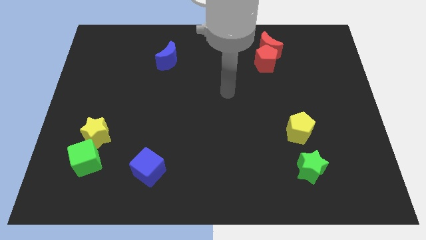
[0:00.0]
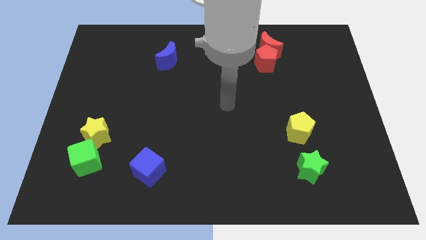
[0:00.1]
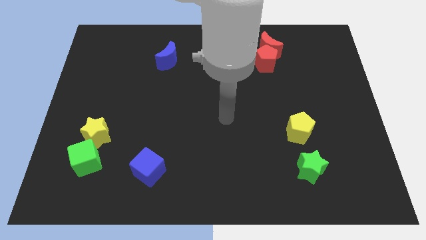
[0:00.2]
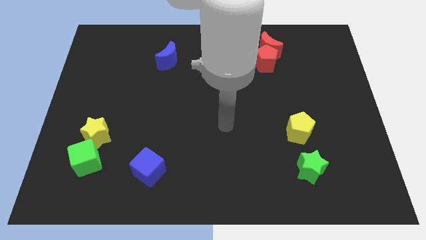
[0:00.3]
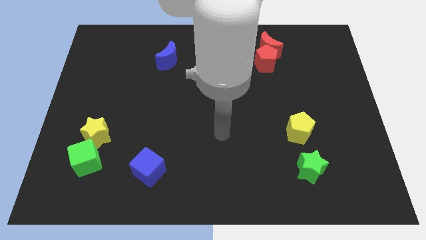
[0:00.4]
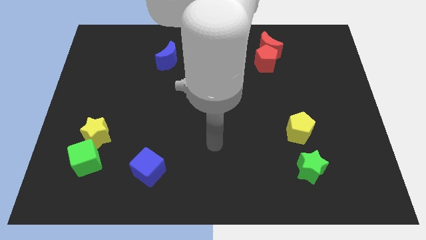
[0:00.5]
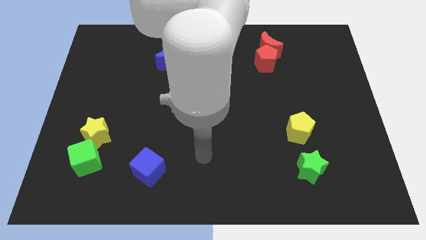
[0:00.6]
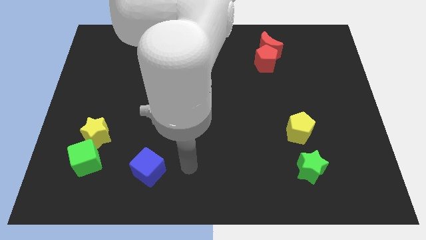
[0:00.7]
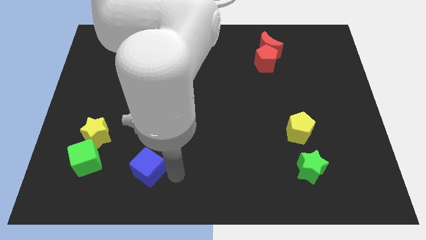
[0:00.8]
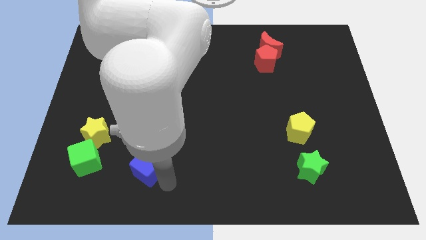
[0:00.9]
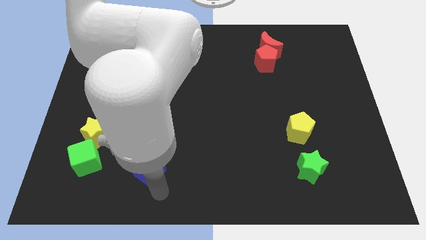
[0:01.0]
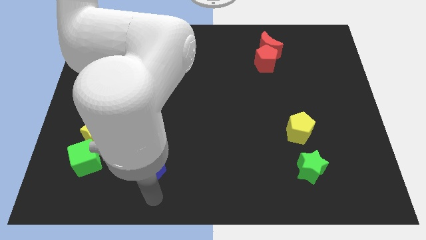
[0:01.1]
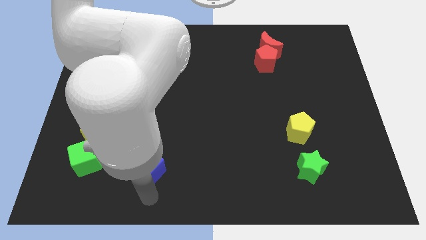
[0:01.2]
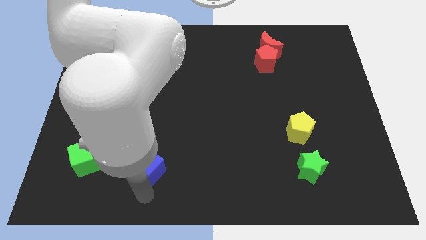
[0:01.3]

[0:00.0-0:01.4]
point your arm at the bottom side of the blue cube

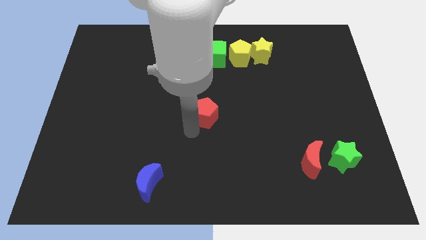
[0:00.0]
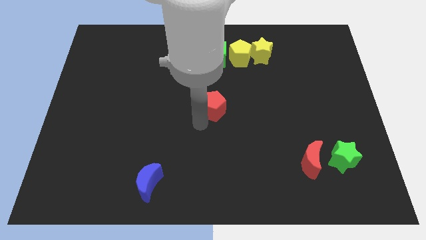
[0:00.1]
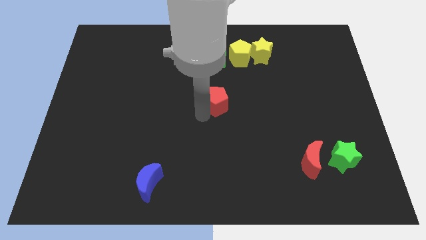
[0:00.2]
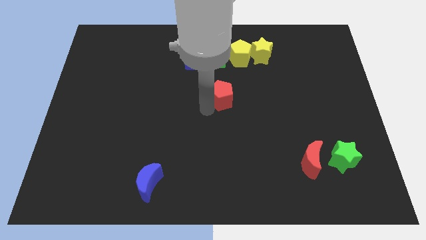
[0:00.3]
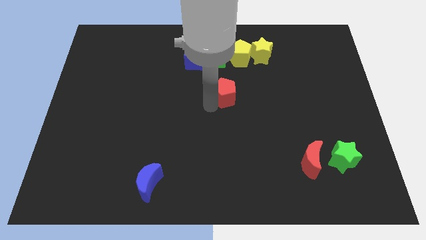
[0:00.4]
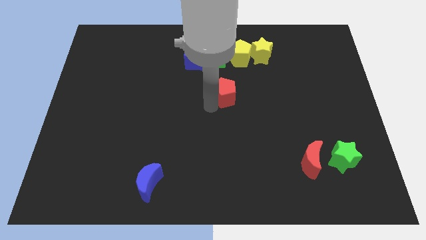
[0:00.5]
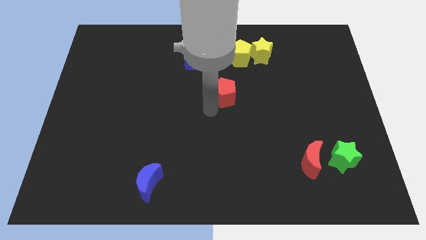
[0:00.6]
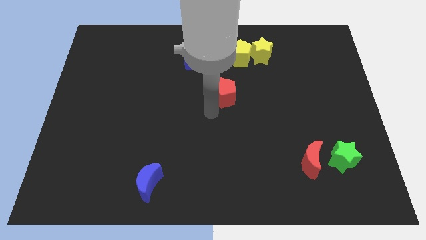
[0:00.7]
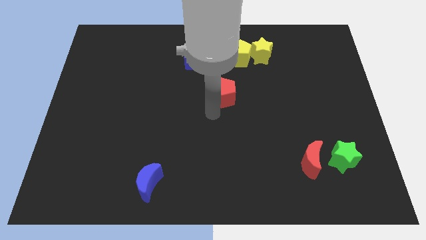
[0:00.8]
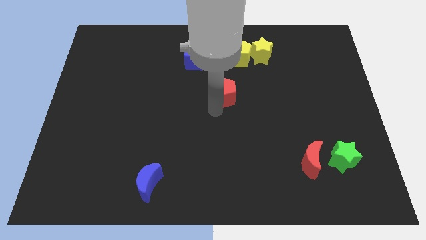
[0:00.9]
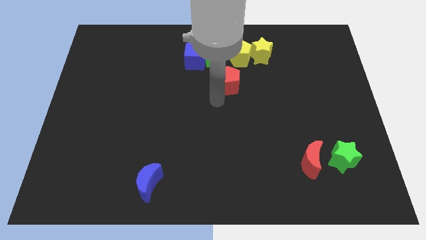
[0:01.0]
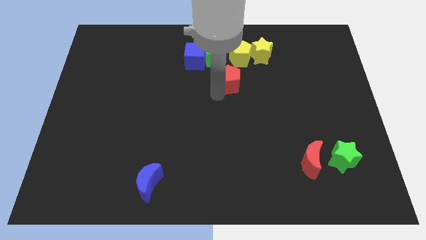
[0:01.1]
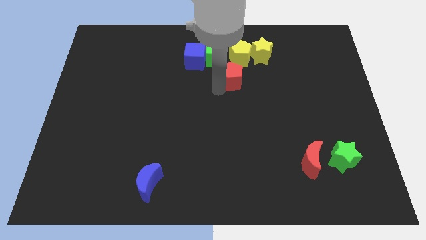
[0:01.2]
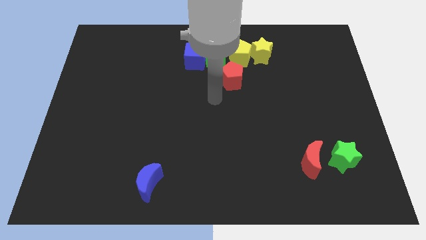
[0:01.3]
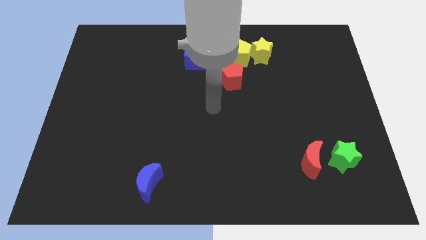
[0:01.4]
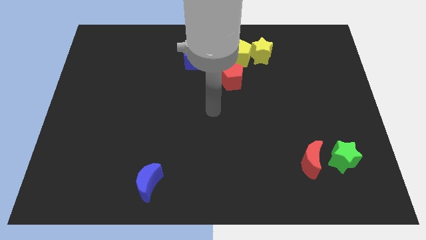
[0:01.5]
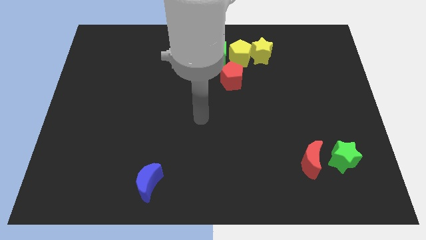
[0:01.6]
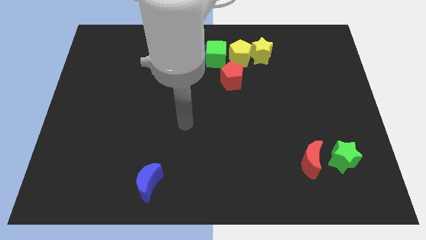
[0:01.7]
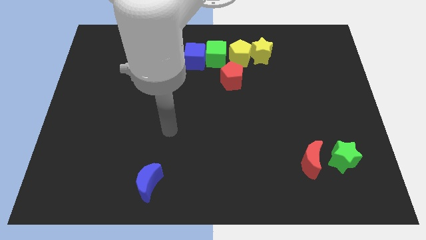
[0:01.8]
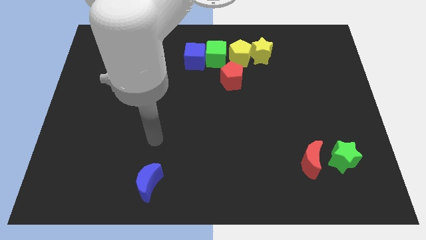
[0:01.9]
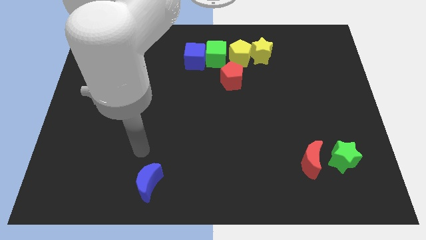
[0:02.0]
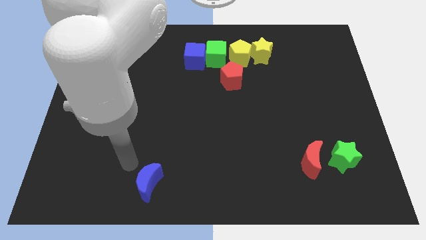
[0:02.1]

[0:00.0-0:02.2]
place the red pentagon below the yellow pentagon

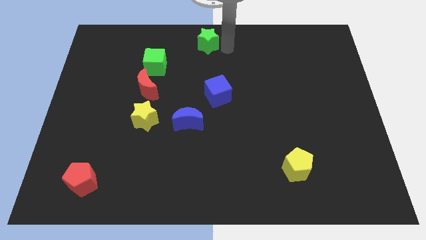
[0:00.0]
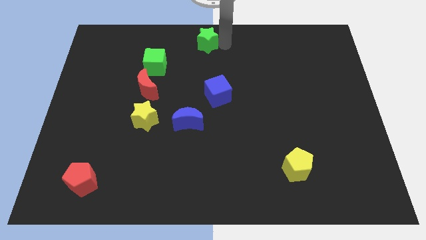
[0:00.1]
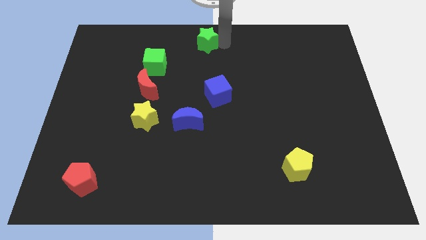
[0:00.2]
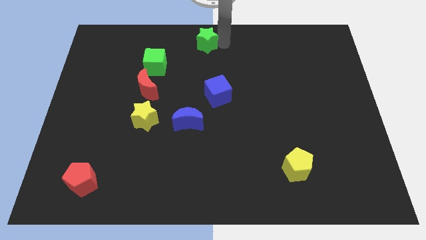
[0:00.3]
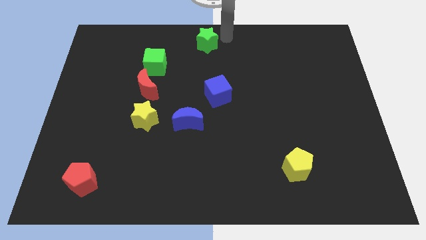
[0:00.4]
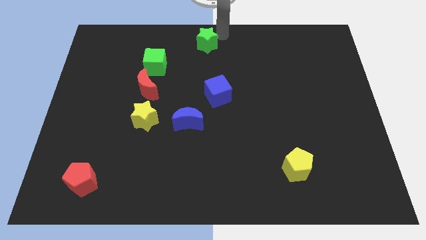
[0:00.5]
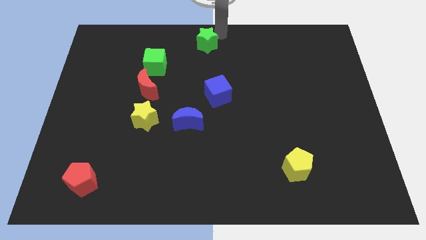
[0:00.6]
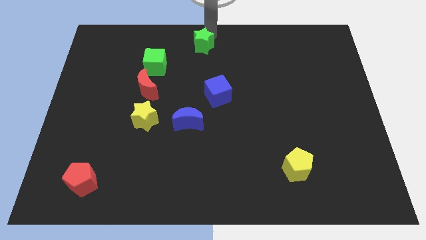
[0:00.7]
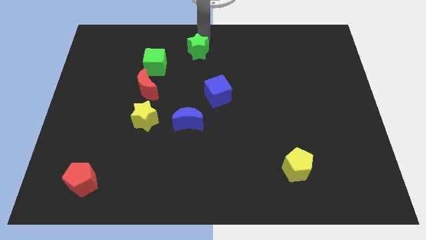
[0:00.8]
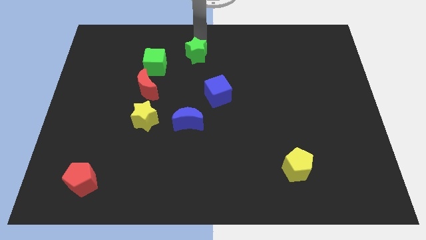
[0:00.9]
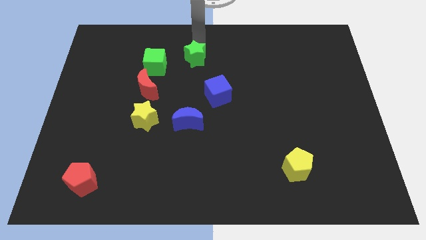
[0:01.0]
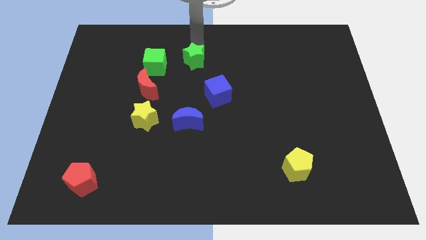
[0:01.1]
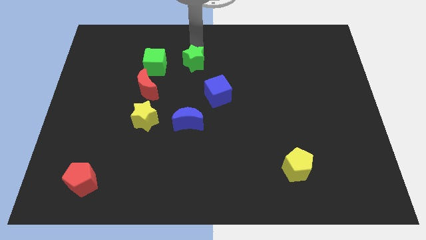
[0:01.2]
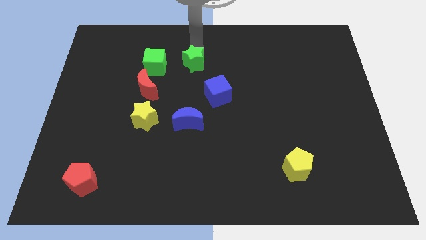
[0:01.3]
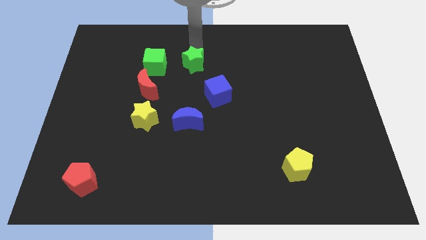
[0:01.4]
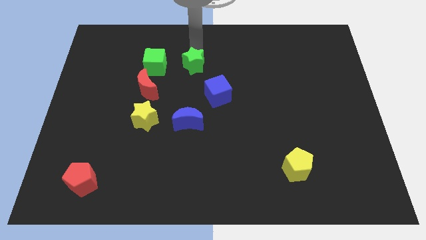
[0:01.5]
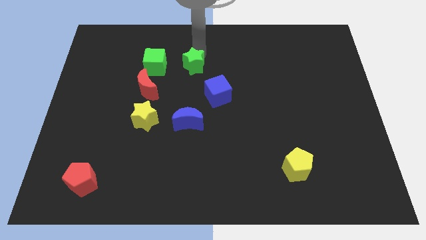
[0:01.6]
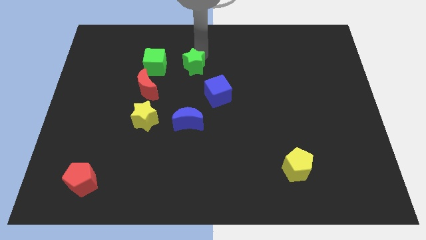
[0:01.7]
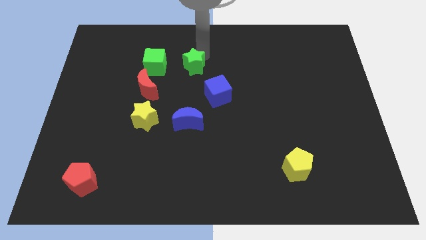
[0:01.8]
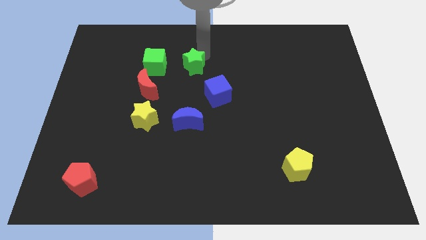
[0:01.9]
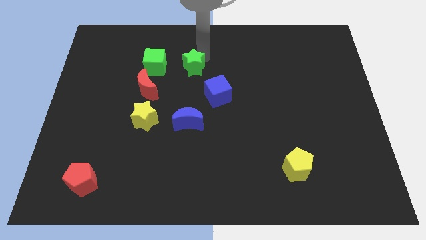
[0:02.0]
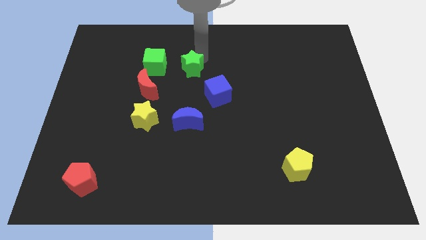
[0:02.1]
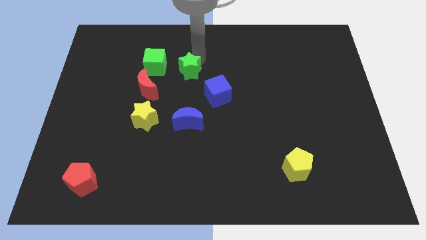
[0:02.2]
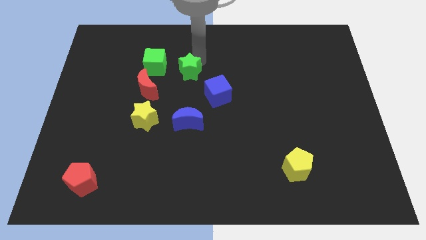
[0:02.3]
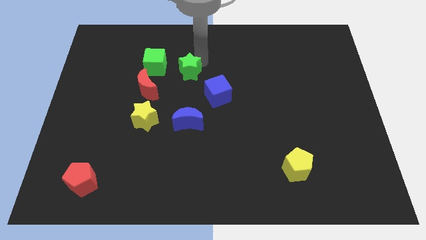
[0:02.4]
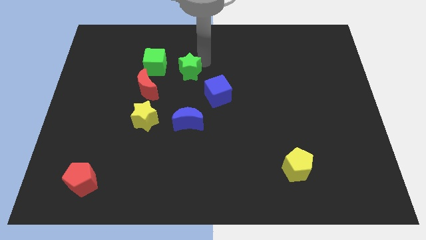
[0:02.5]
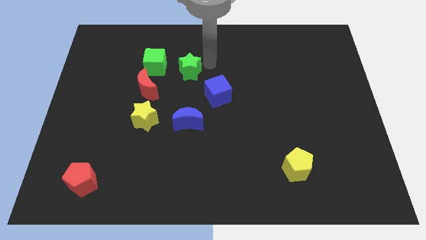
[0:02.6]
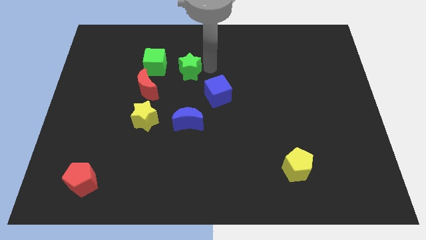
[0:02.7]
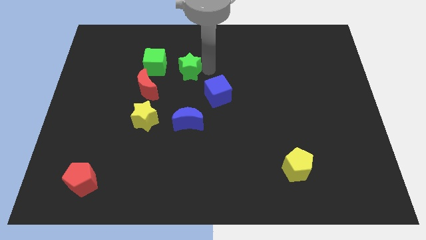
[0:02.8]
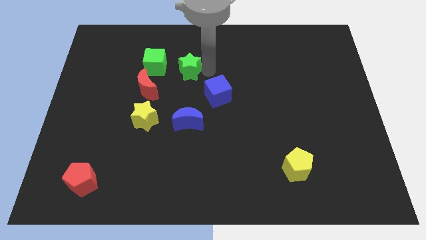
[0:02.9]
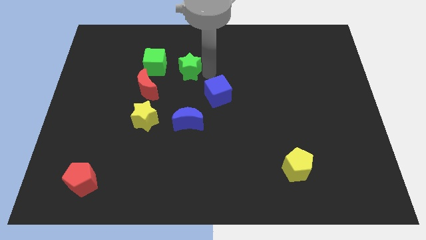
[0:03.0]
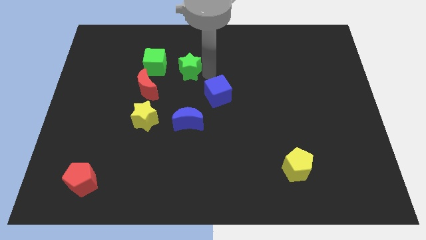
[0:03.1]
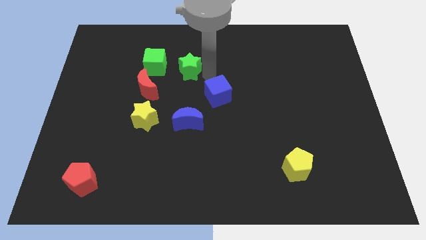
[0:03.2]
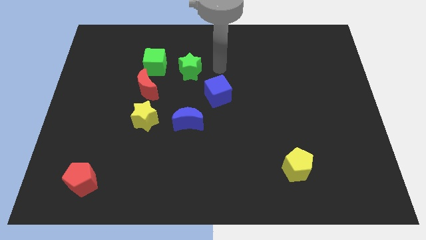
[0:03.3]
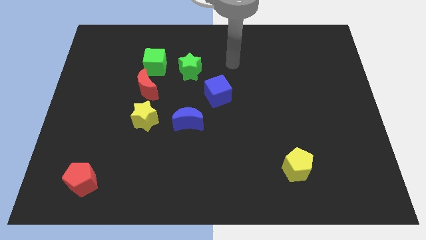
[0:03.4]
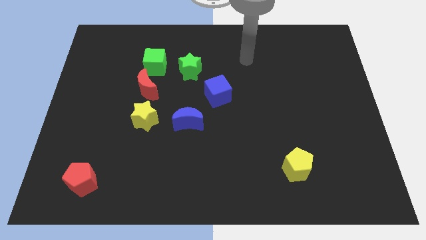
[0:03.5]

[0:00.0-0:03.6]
place the green star vertically above the blue moon

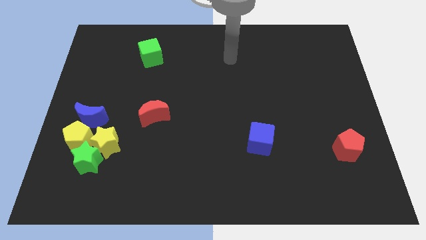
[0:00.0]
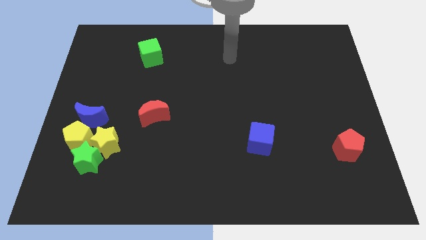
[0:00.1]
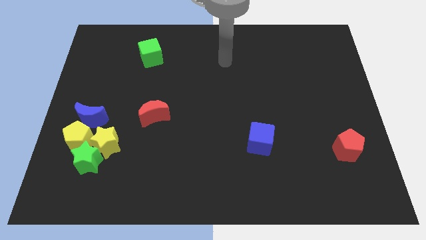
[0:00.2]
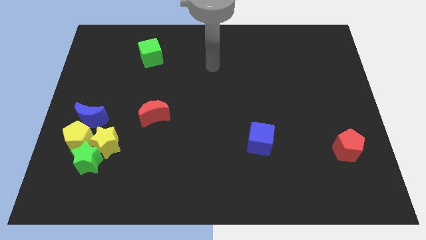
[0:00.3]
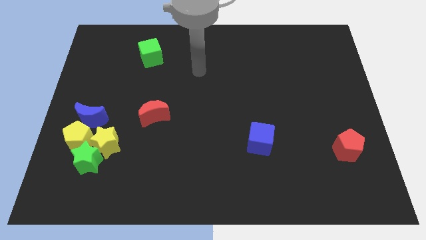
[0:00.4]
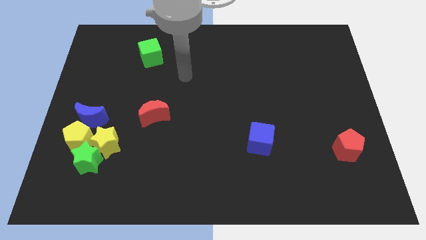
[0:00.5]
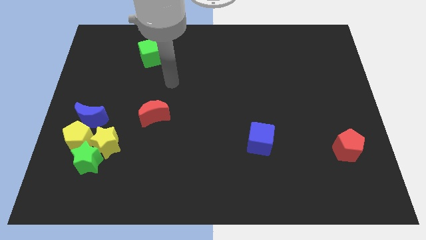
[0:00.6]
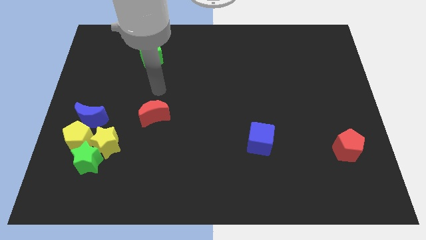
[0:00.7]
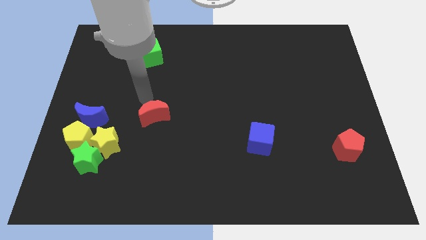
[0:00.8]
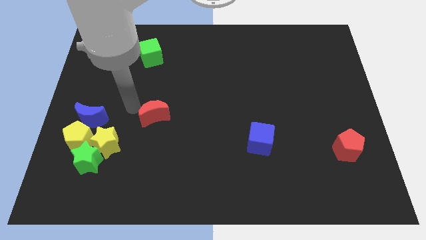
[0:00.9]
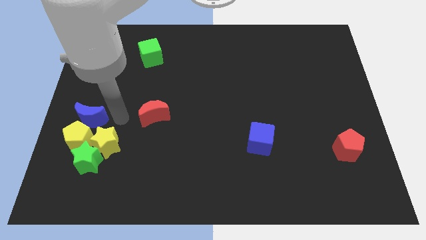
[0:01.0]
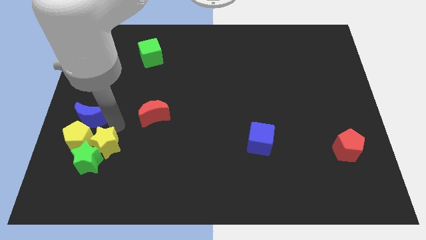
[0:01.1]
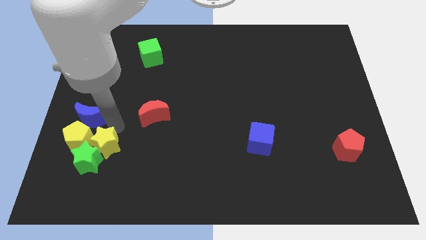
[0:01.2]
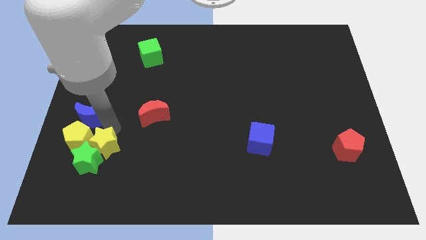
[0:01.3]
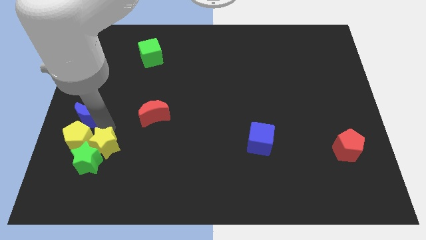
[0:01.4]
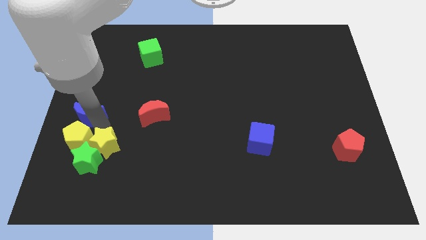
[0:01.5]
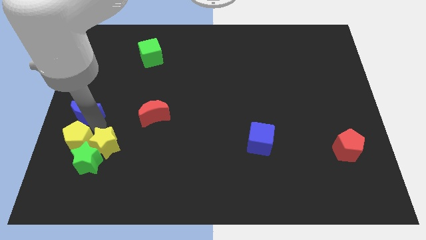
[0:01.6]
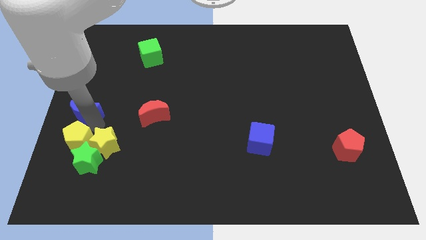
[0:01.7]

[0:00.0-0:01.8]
point your arm at the bottom of the blue crescent

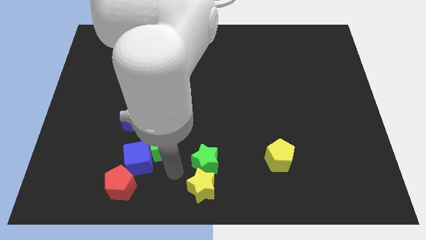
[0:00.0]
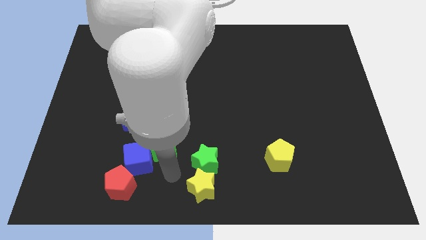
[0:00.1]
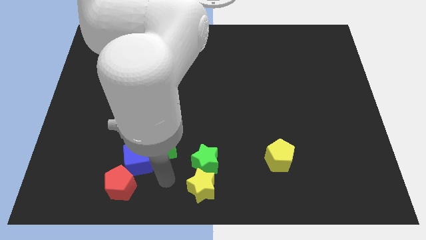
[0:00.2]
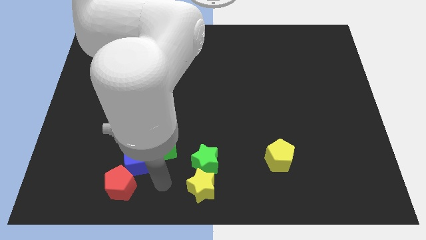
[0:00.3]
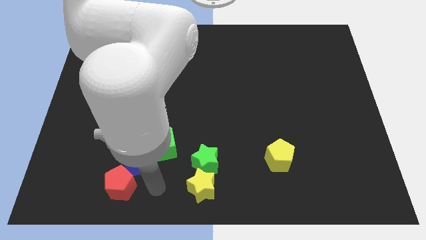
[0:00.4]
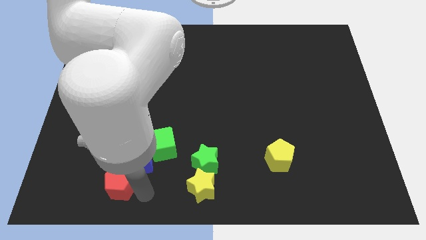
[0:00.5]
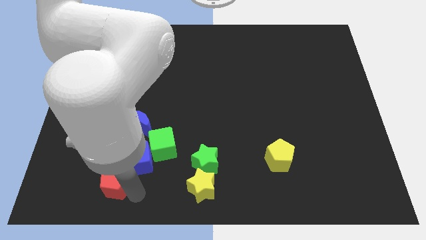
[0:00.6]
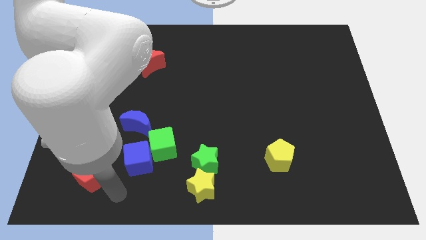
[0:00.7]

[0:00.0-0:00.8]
touch the bottom of red pentagon
